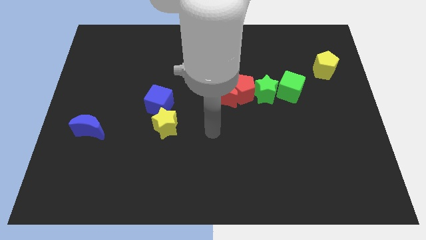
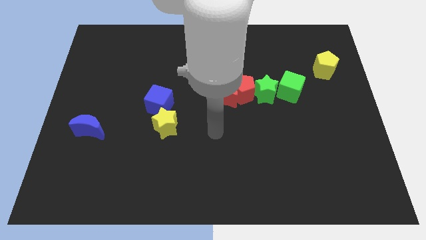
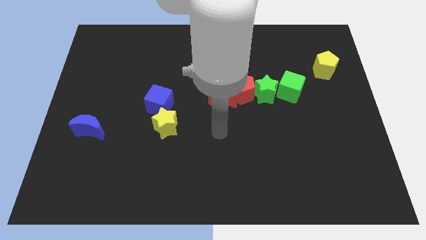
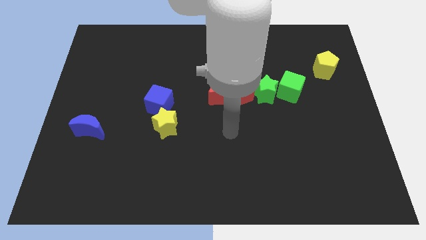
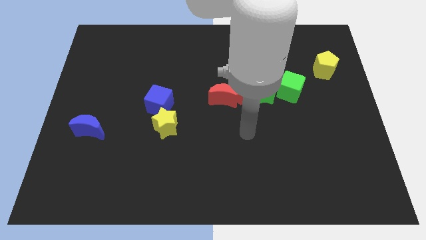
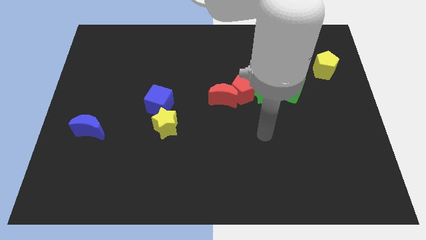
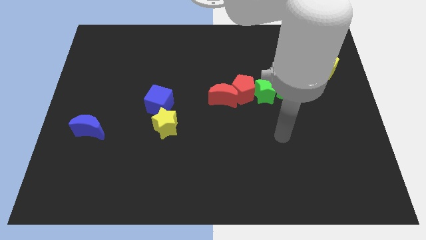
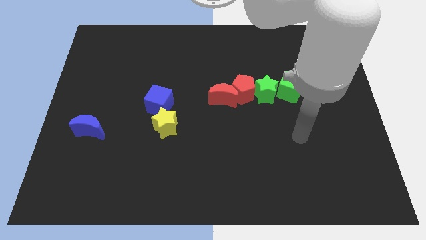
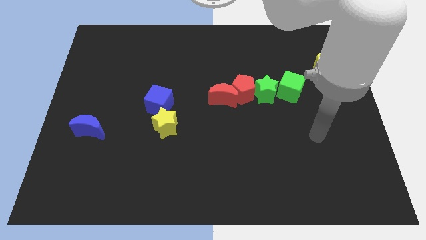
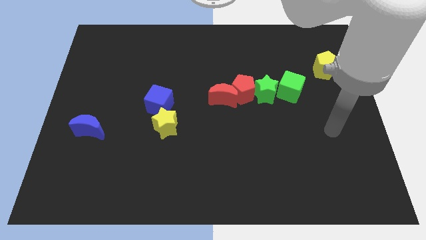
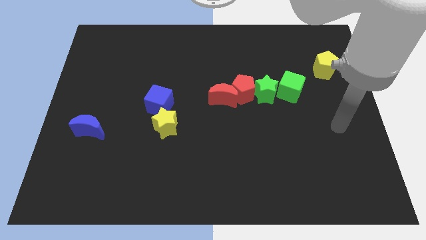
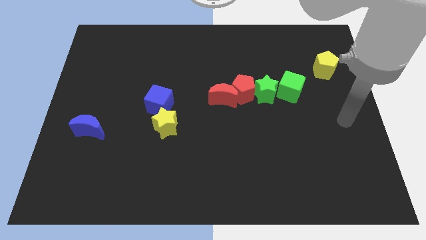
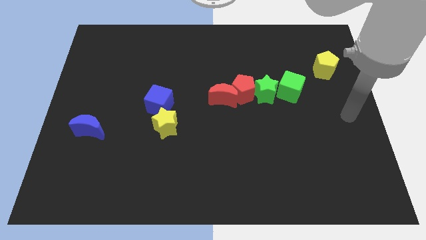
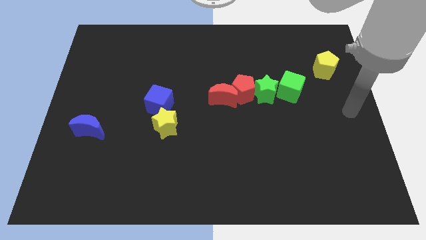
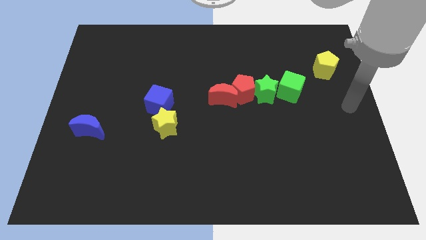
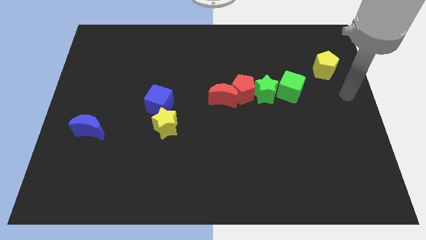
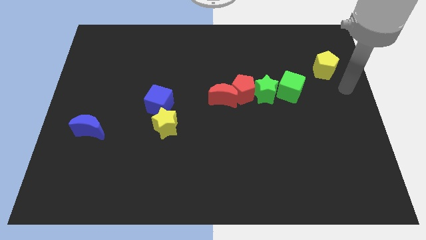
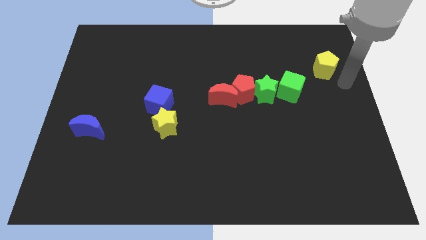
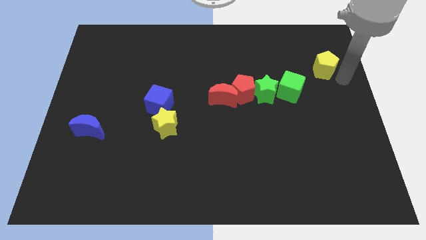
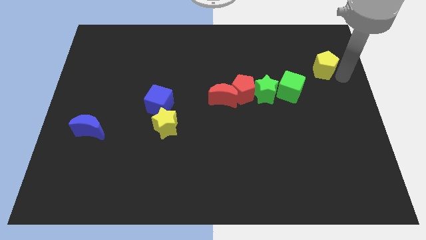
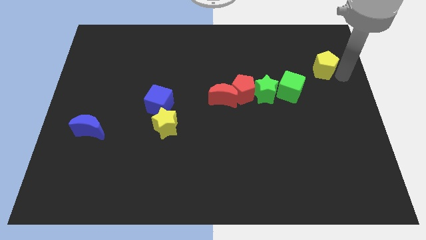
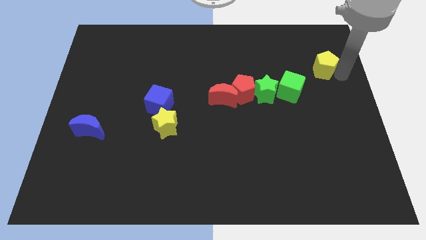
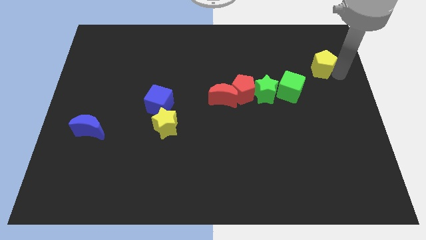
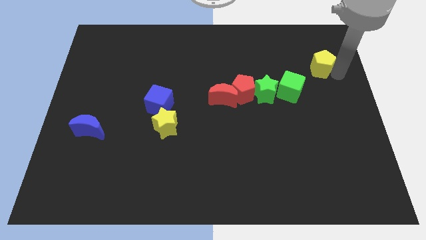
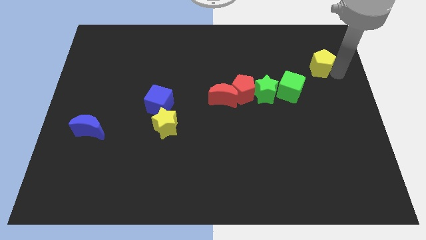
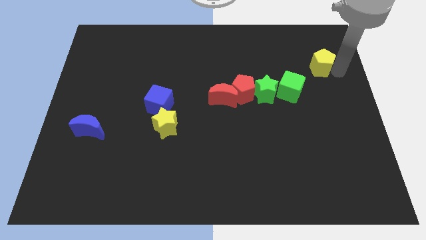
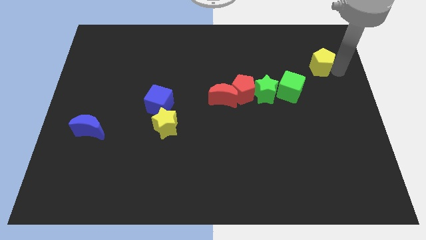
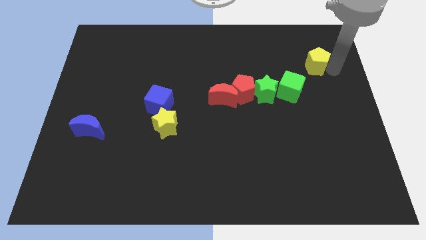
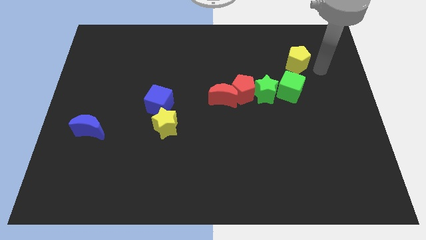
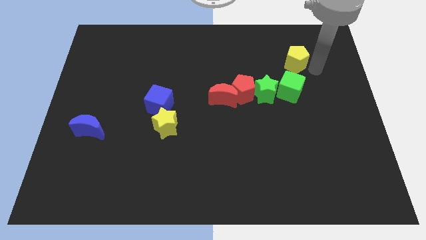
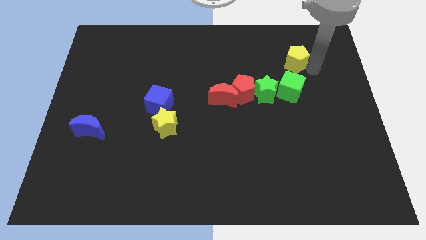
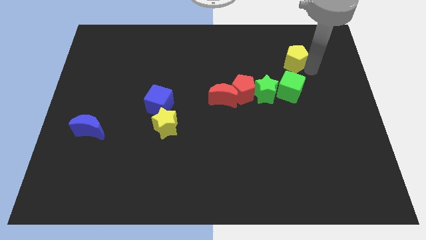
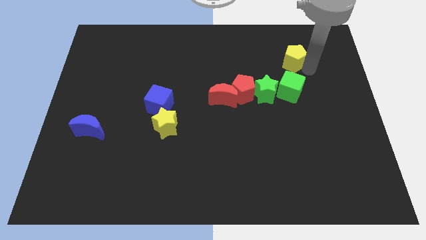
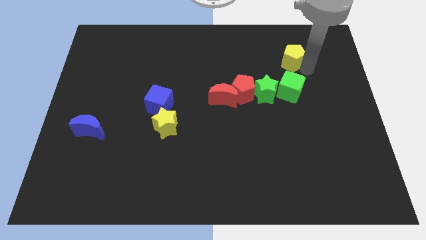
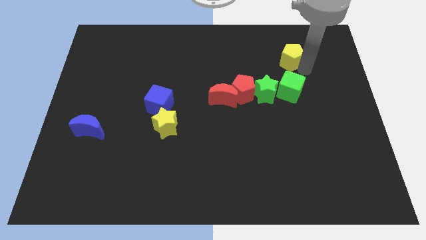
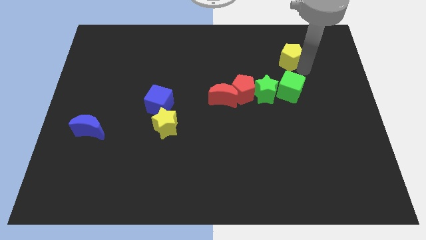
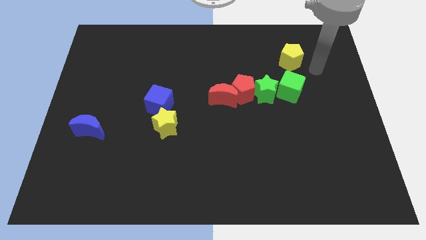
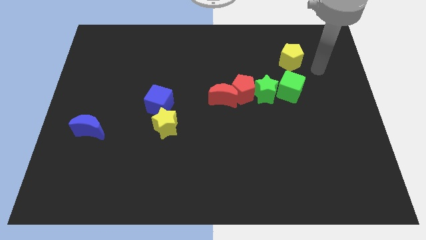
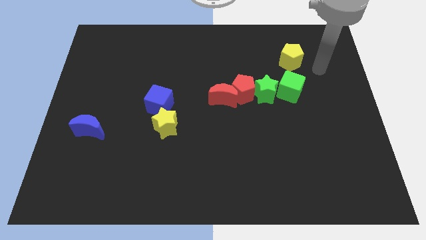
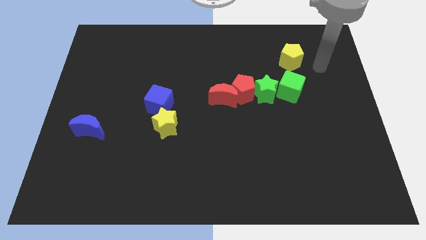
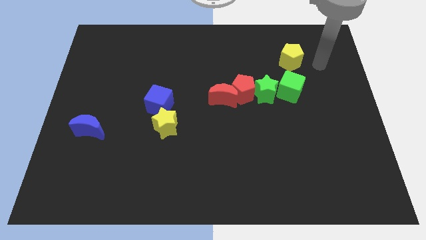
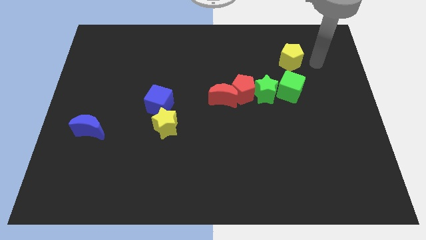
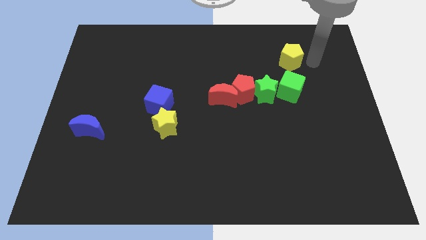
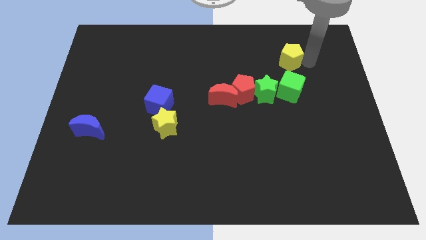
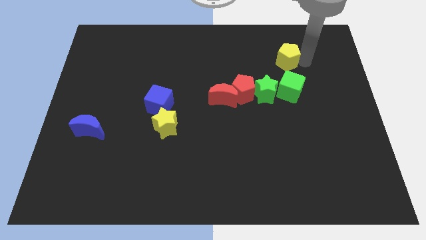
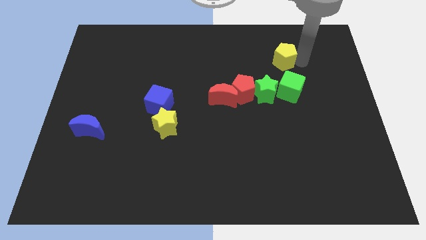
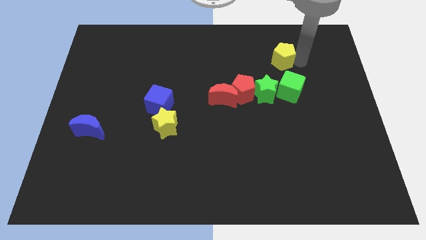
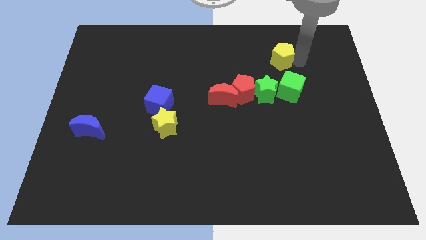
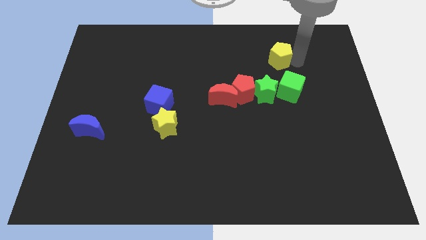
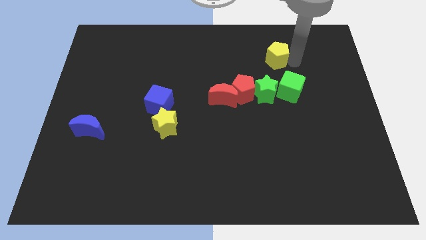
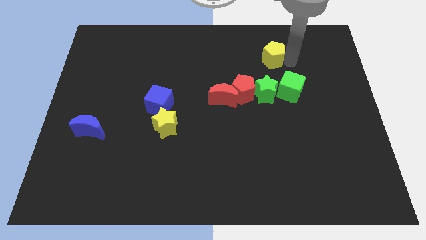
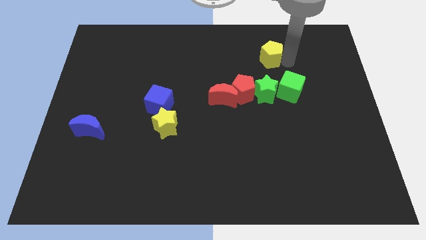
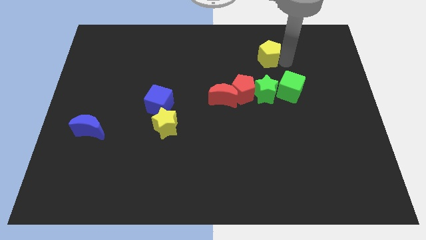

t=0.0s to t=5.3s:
move the yellow pentagon slightly left

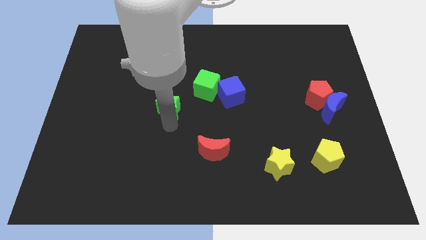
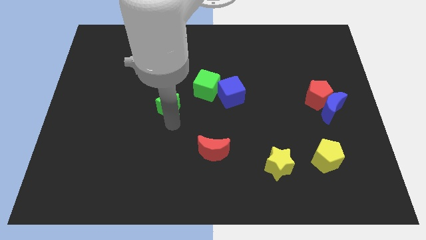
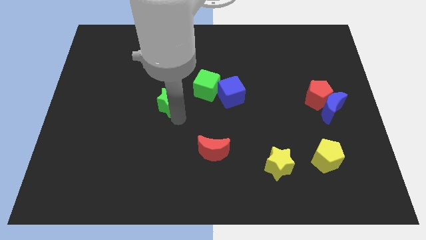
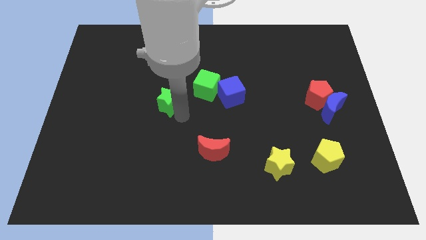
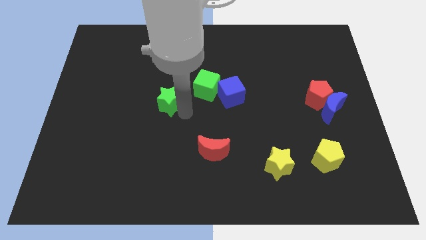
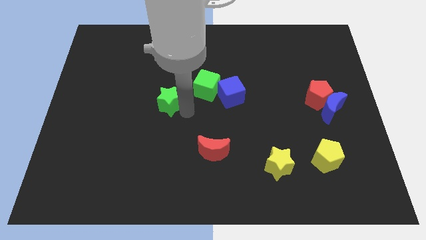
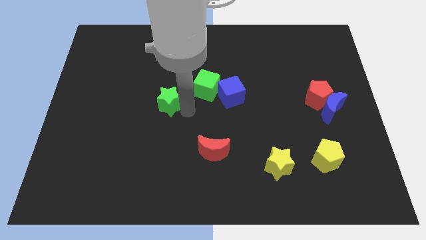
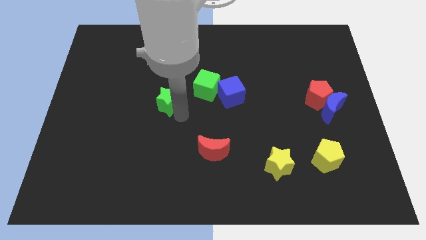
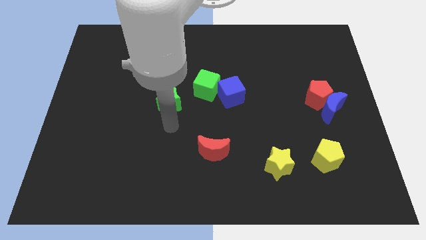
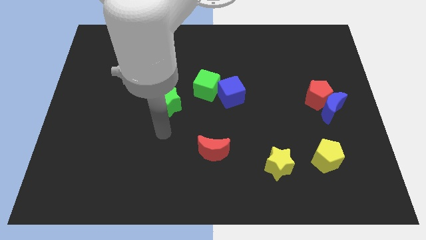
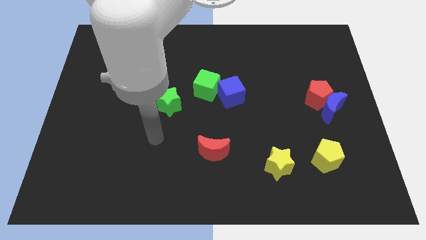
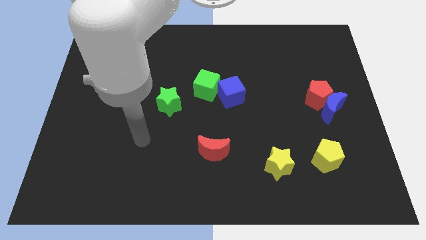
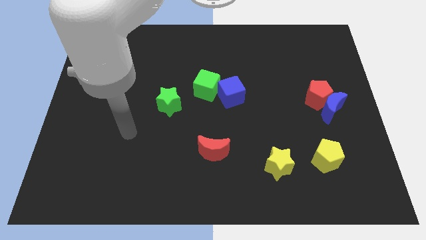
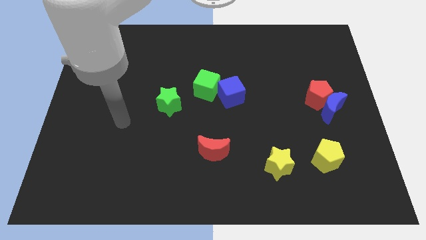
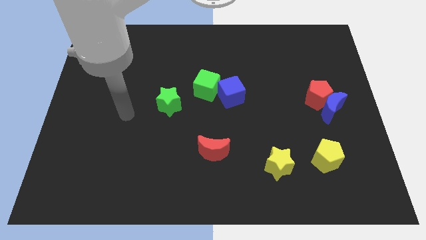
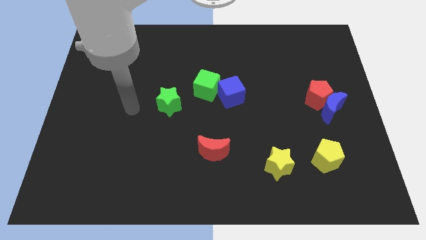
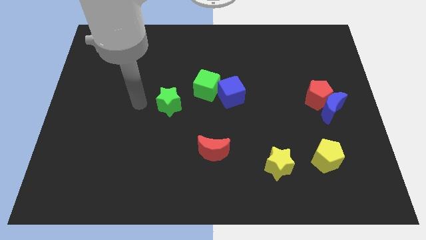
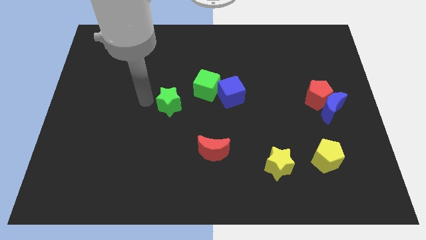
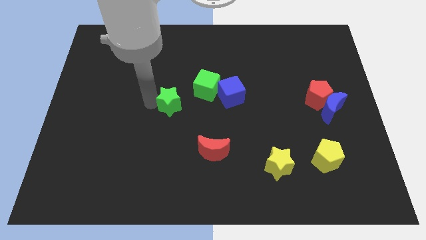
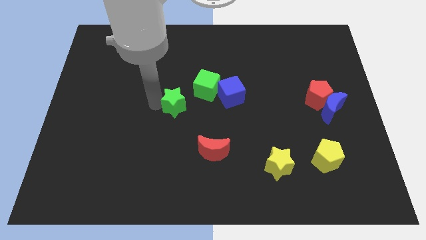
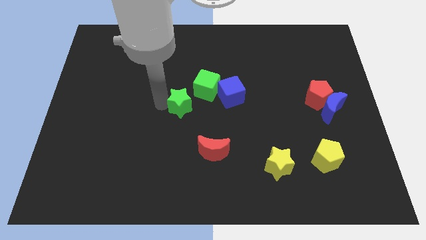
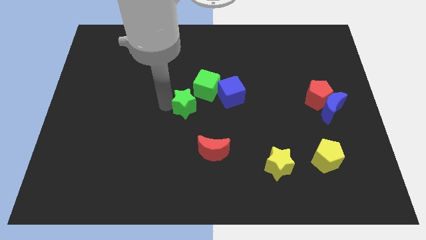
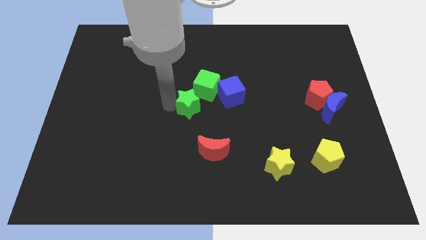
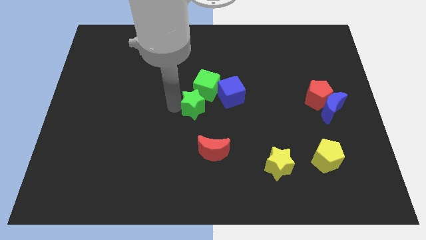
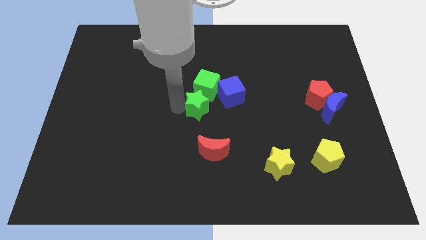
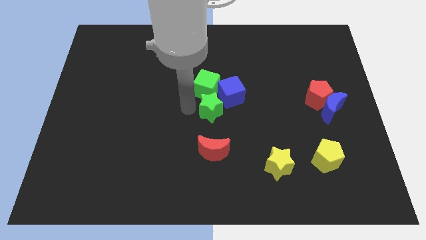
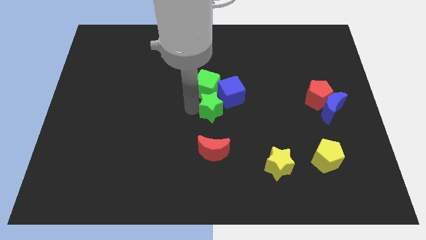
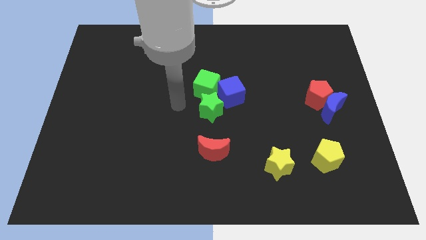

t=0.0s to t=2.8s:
push green star at the bottom of cubes

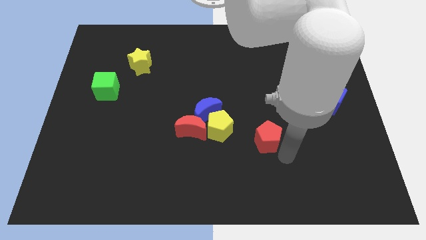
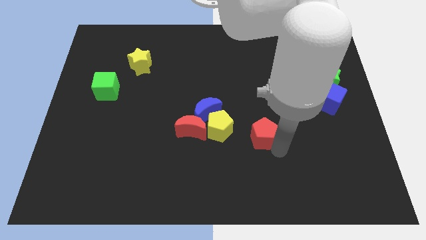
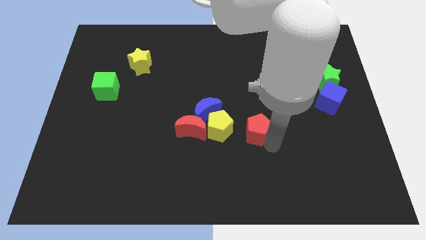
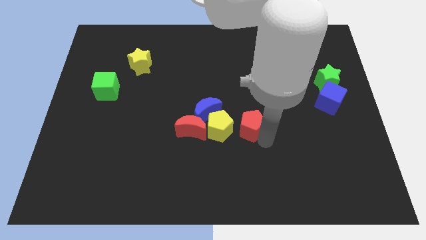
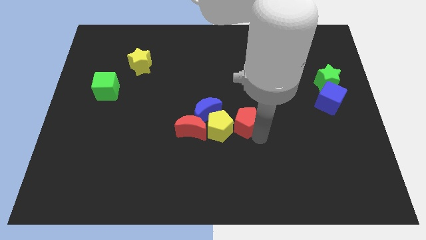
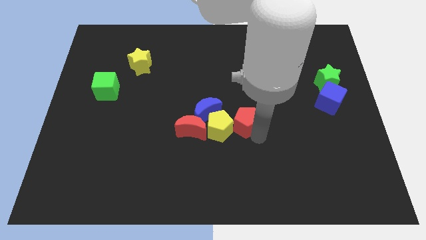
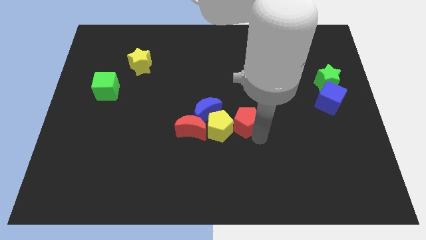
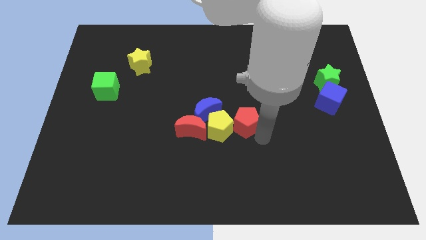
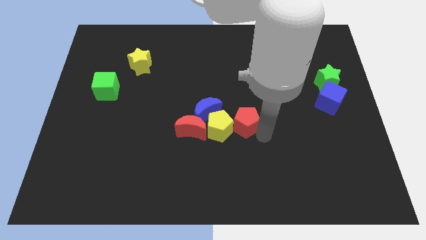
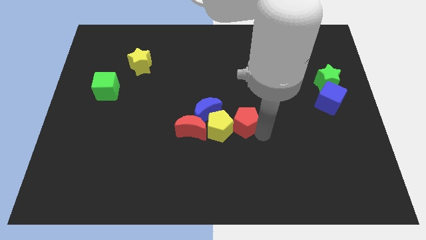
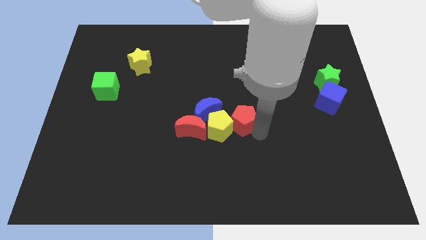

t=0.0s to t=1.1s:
place the red pentagon right to the yellow pentagon to form a horizontal line
